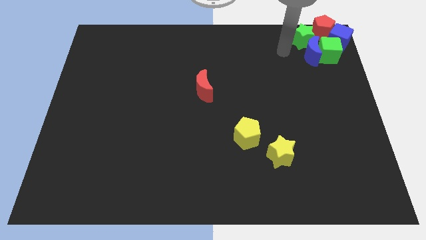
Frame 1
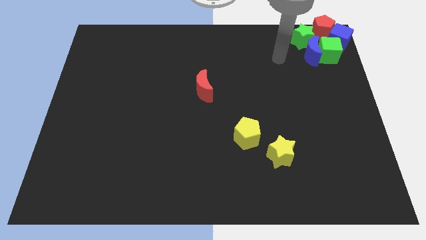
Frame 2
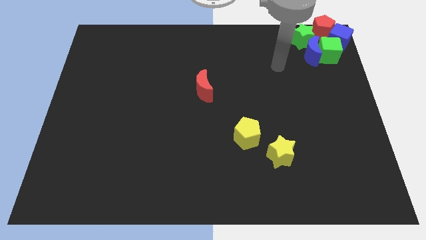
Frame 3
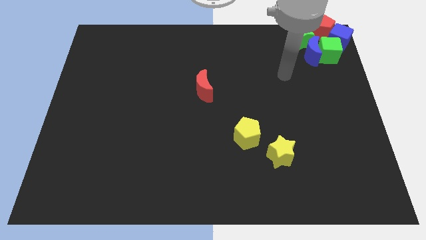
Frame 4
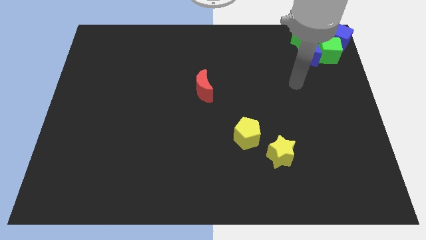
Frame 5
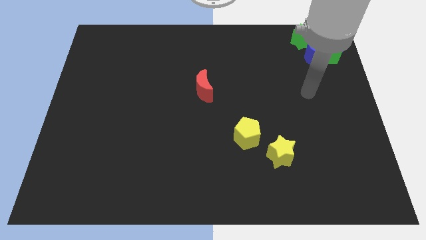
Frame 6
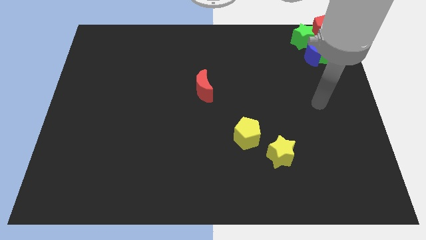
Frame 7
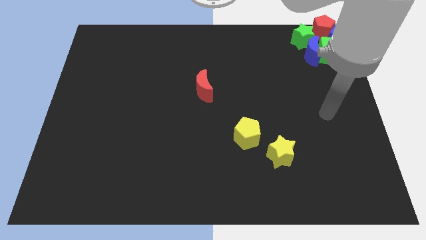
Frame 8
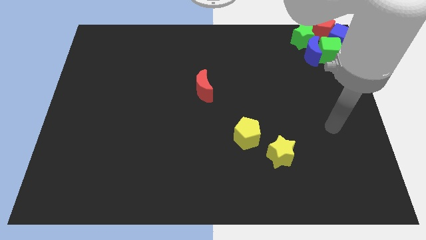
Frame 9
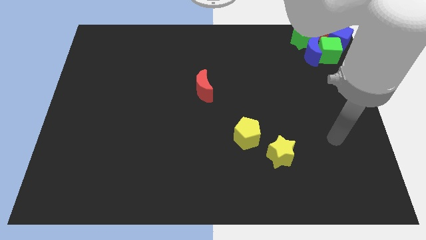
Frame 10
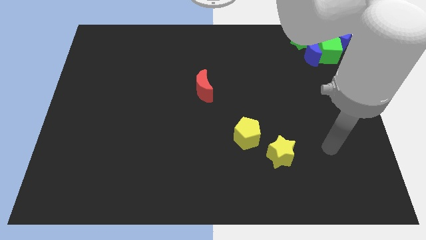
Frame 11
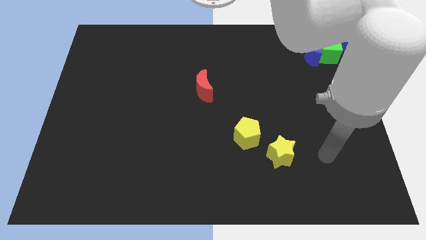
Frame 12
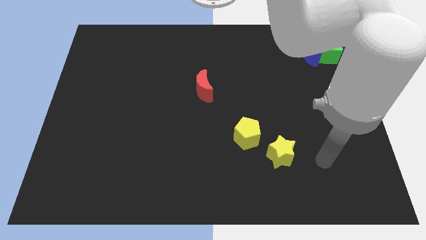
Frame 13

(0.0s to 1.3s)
move your arm away from the green star

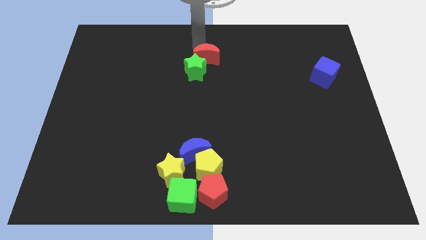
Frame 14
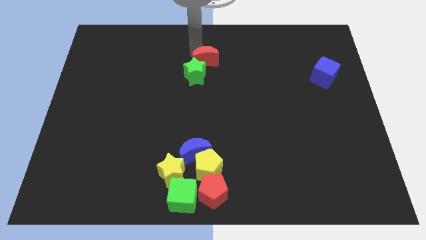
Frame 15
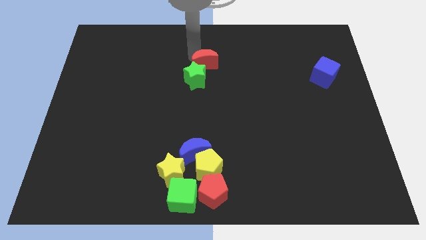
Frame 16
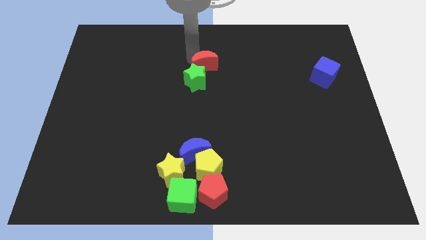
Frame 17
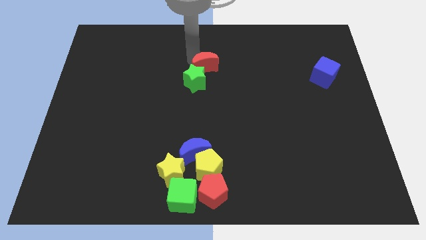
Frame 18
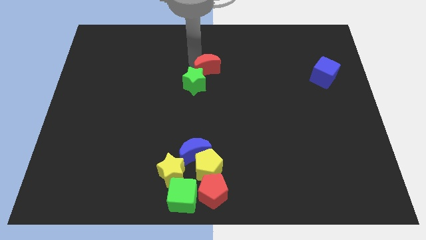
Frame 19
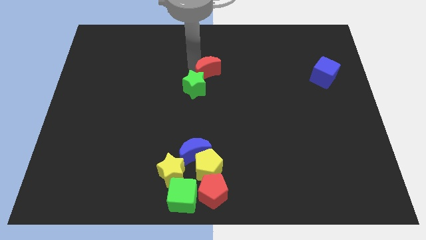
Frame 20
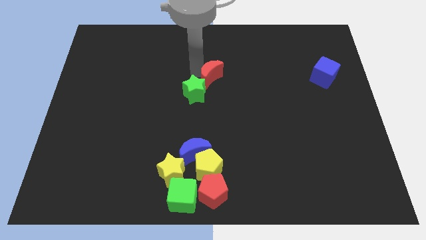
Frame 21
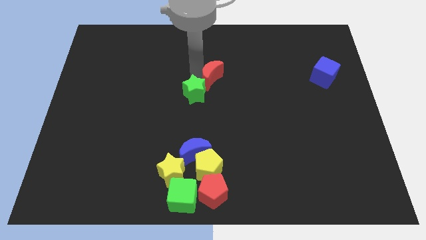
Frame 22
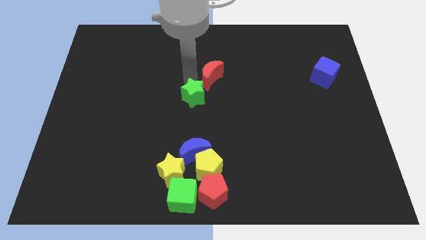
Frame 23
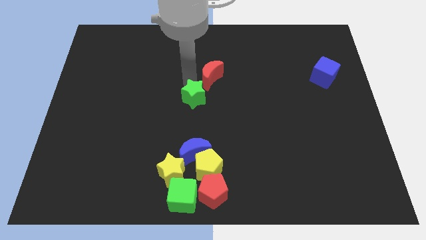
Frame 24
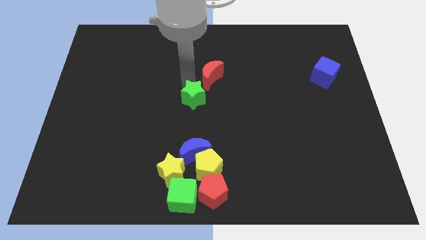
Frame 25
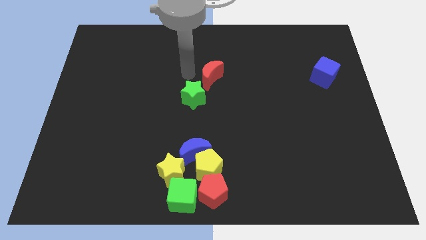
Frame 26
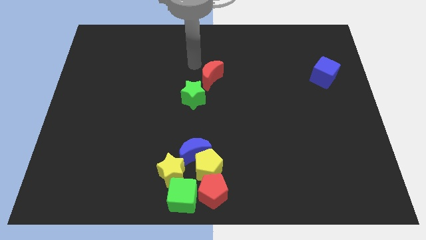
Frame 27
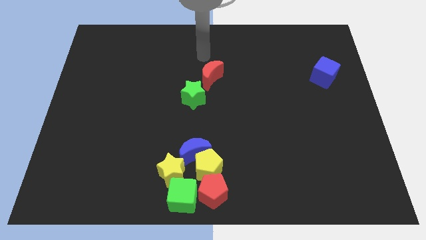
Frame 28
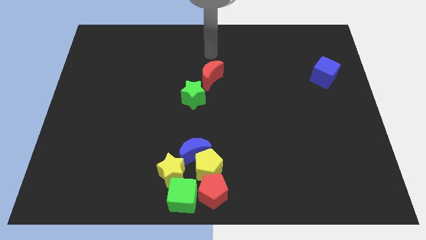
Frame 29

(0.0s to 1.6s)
put the green star at the center

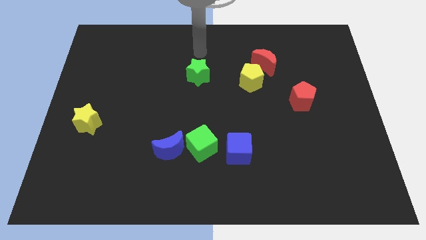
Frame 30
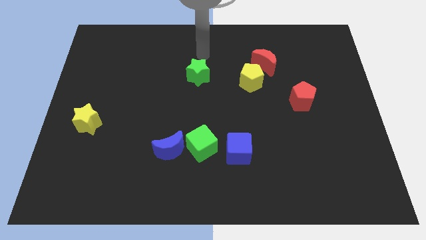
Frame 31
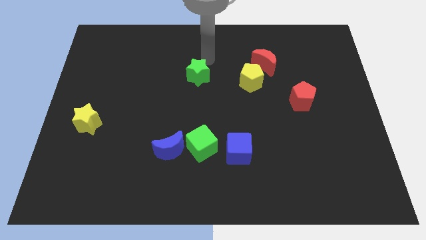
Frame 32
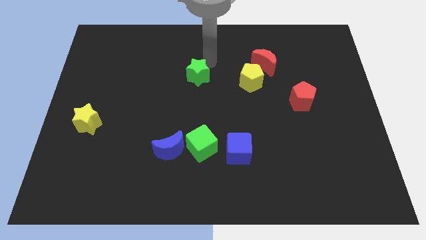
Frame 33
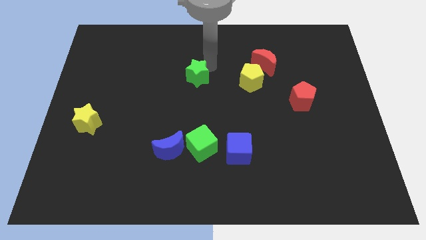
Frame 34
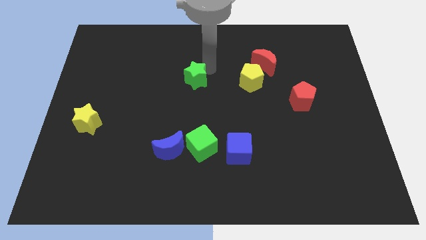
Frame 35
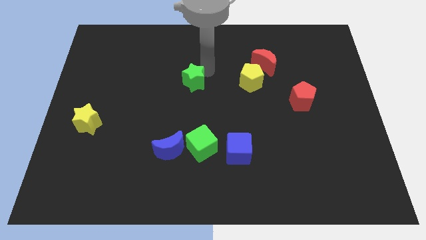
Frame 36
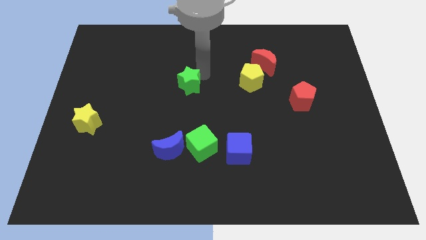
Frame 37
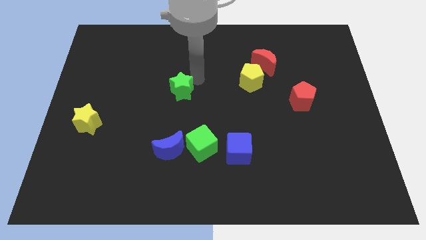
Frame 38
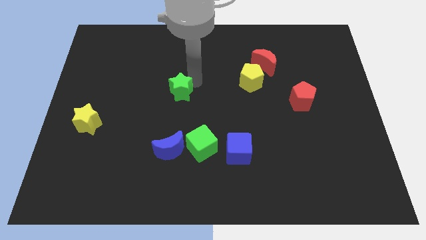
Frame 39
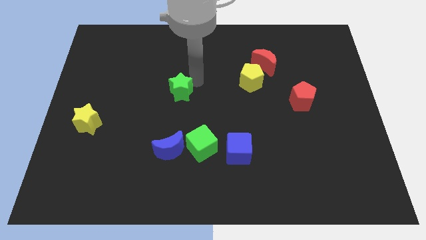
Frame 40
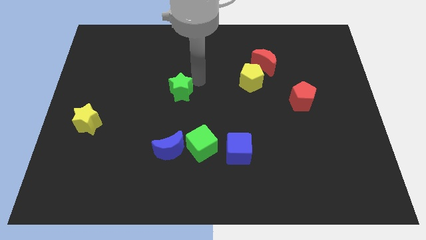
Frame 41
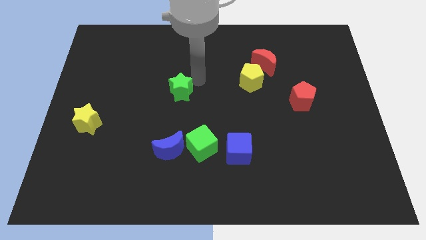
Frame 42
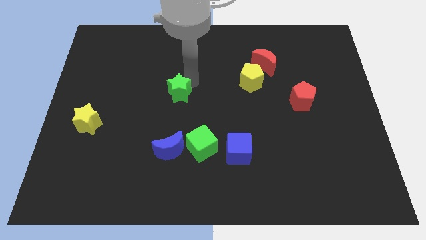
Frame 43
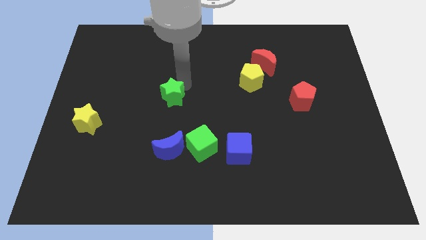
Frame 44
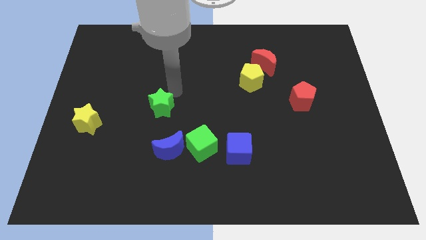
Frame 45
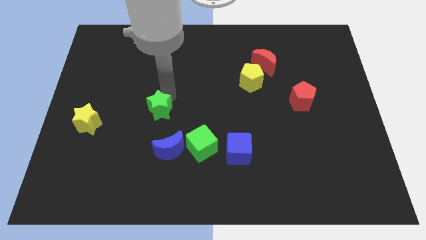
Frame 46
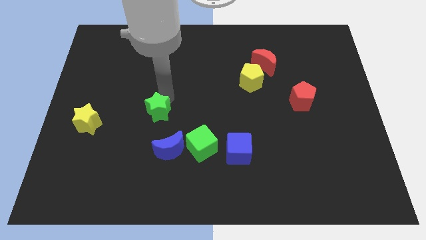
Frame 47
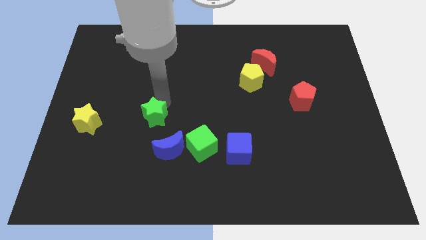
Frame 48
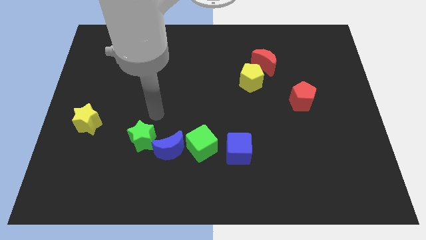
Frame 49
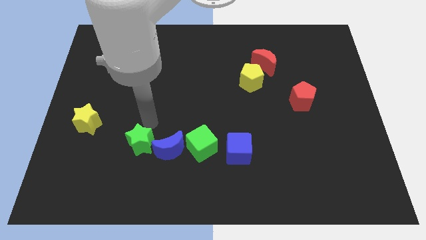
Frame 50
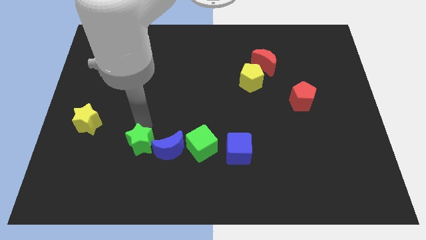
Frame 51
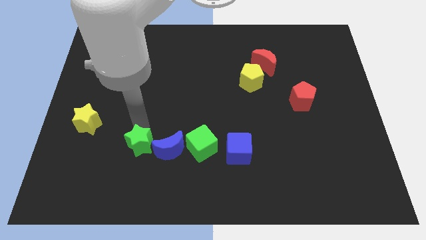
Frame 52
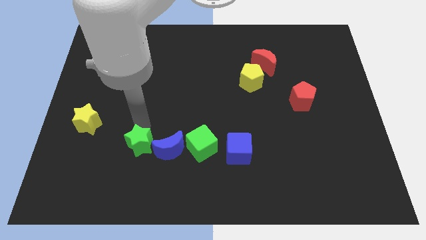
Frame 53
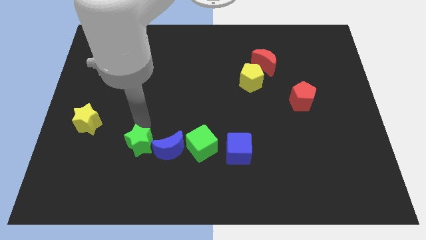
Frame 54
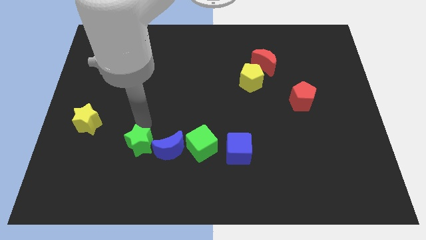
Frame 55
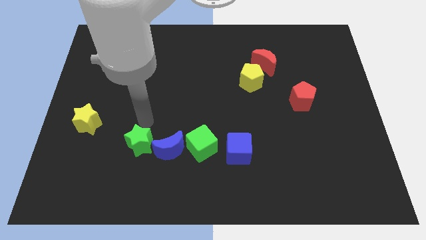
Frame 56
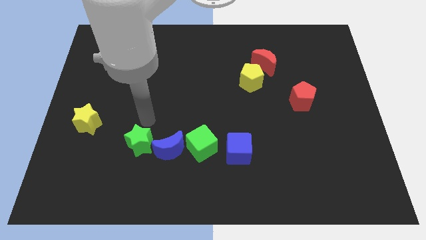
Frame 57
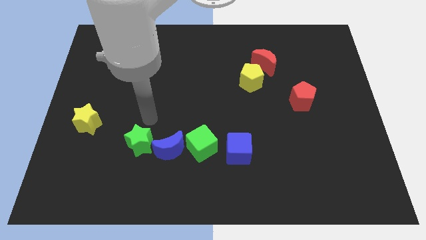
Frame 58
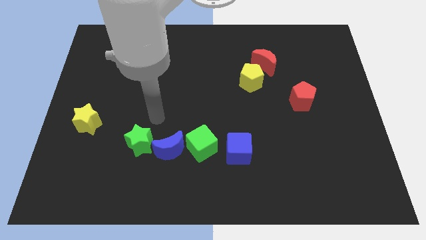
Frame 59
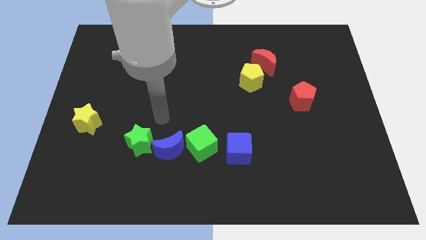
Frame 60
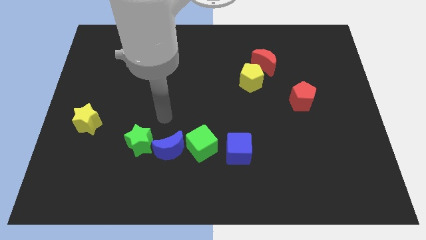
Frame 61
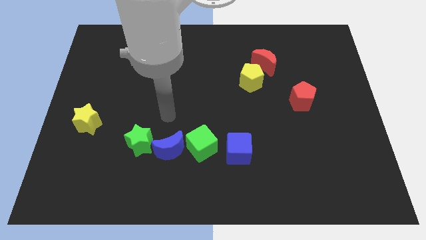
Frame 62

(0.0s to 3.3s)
move the green star parallel left to the blue moon

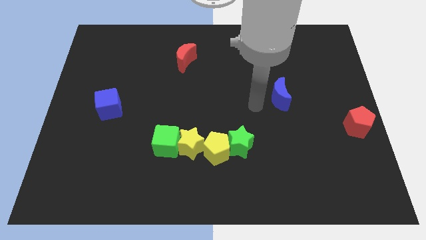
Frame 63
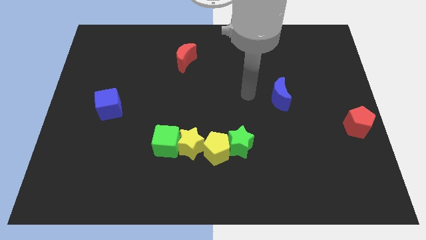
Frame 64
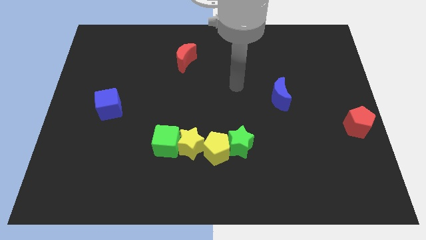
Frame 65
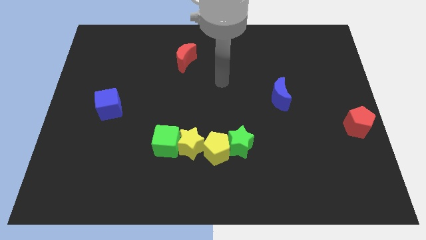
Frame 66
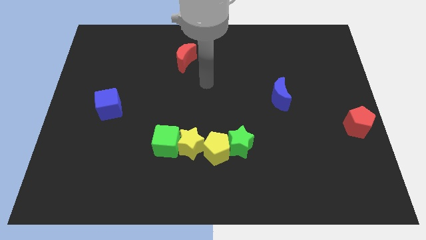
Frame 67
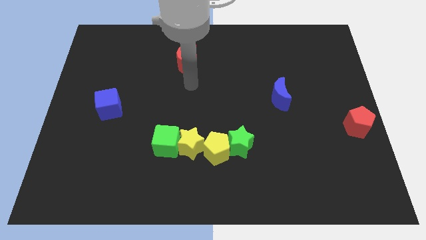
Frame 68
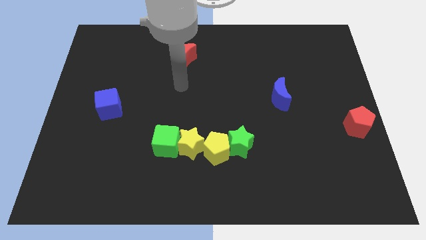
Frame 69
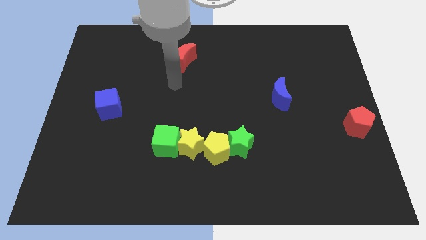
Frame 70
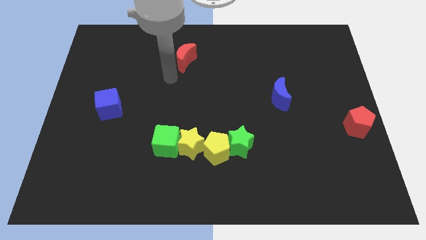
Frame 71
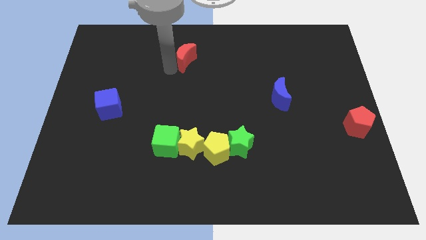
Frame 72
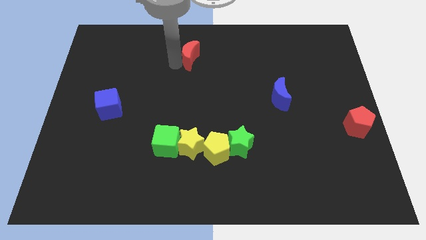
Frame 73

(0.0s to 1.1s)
go away from the green star

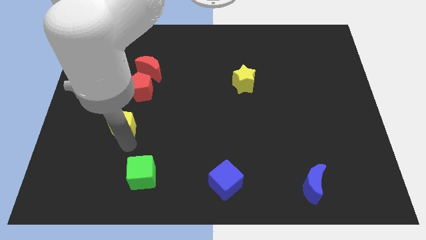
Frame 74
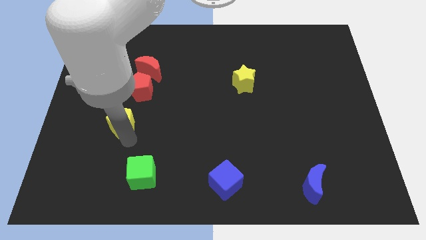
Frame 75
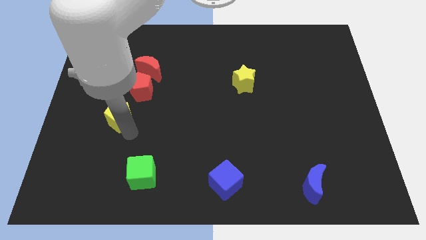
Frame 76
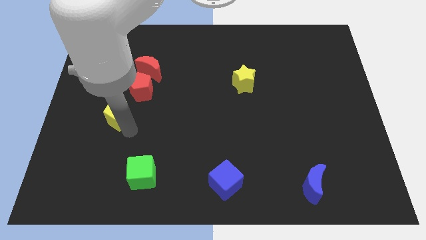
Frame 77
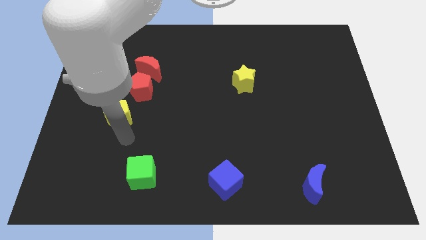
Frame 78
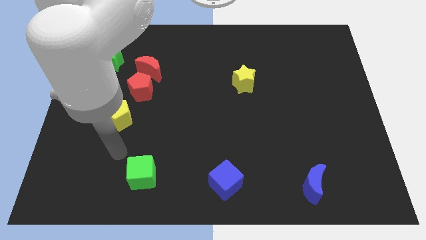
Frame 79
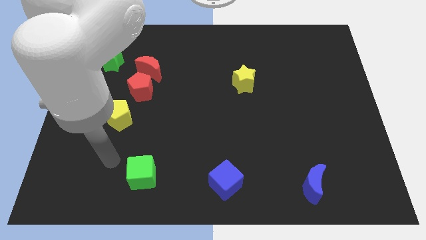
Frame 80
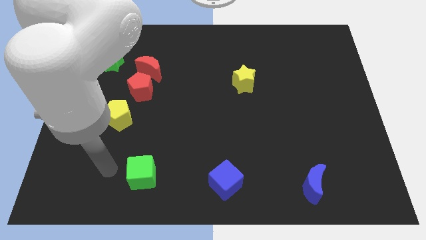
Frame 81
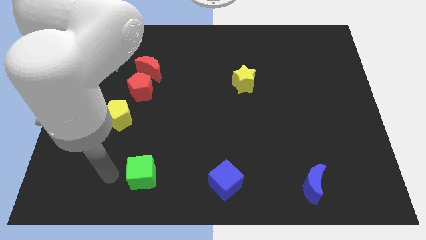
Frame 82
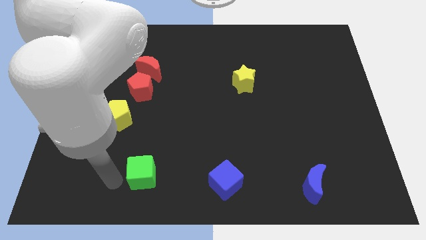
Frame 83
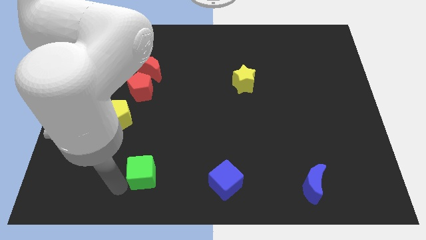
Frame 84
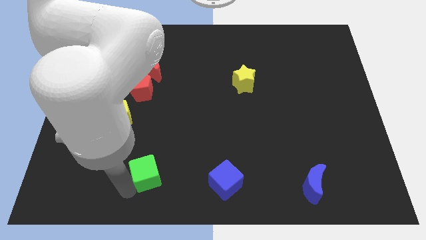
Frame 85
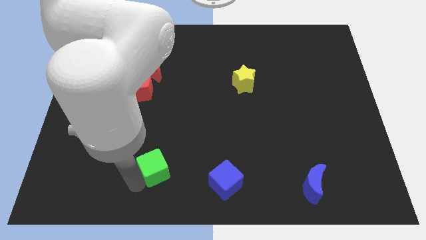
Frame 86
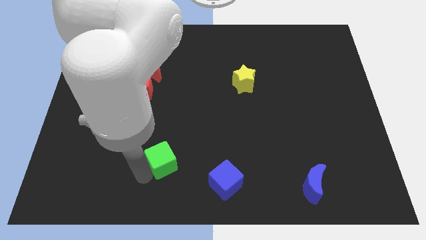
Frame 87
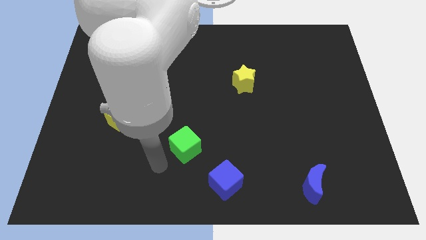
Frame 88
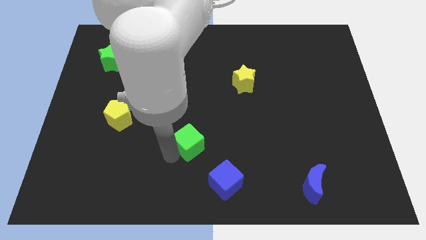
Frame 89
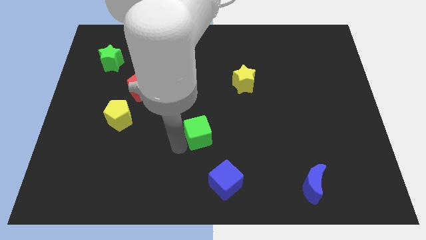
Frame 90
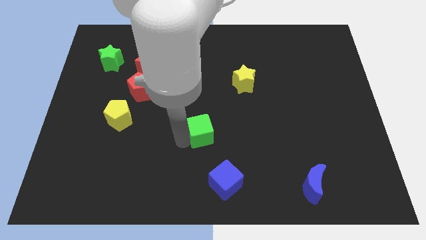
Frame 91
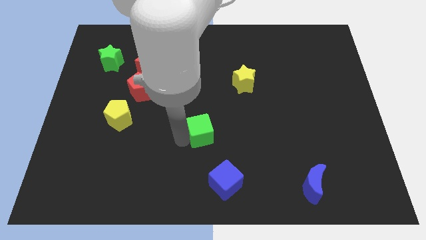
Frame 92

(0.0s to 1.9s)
move the green cube diagonal to the blue cube
